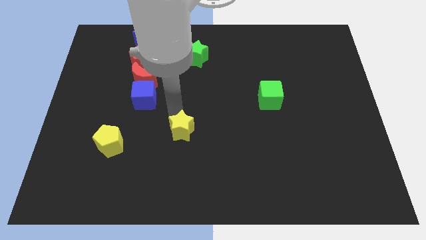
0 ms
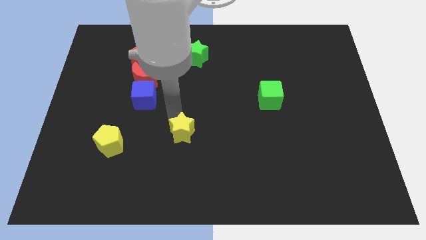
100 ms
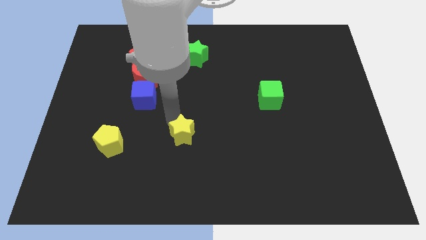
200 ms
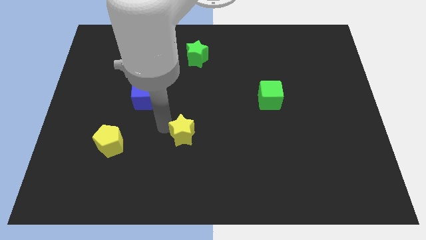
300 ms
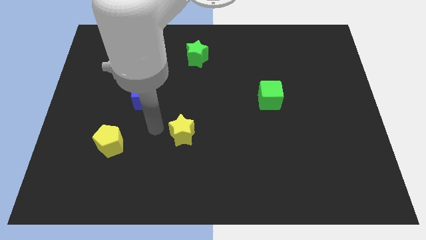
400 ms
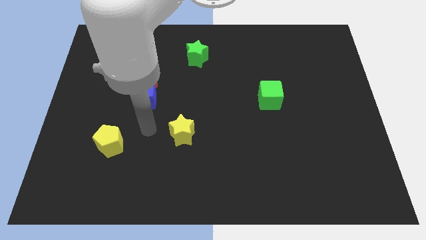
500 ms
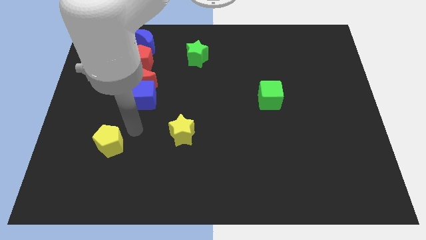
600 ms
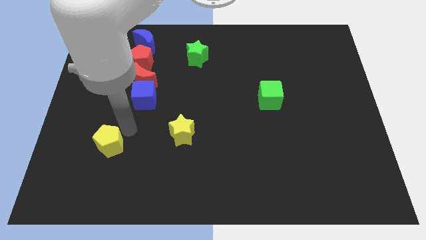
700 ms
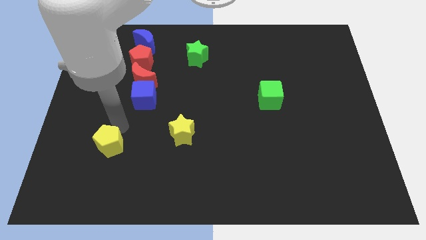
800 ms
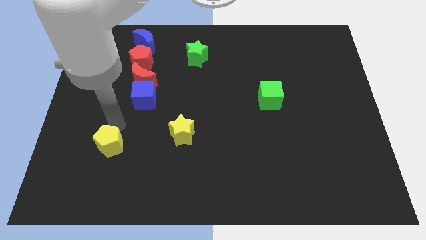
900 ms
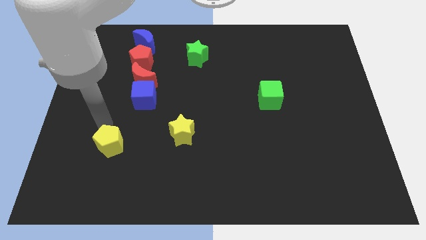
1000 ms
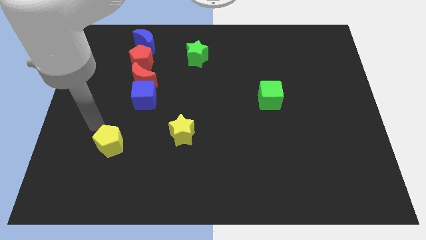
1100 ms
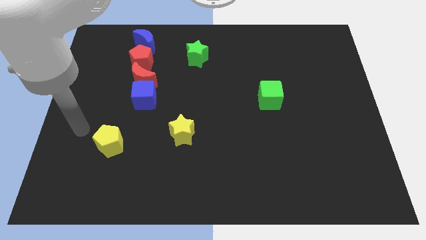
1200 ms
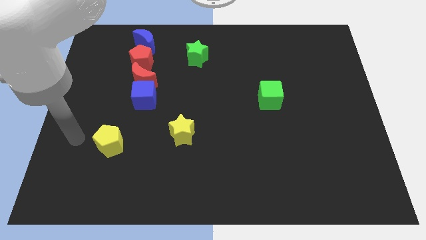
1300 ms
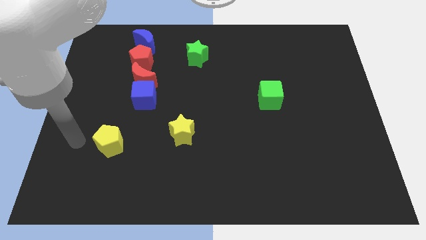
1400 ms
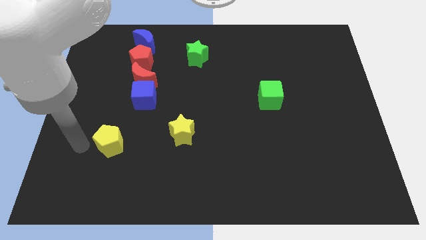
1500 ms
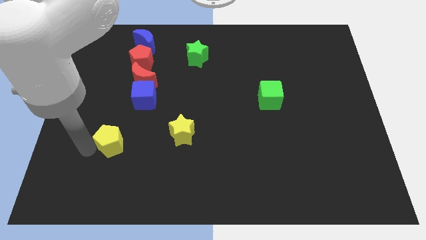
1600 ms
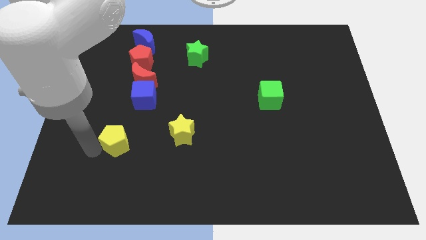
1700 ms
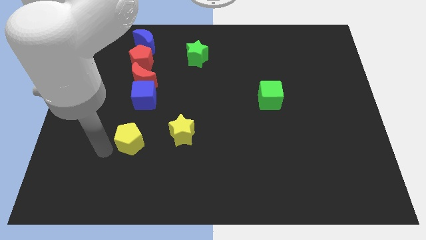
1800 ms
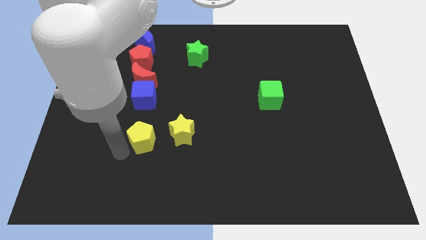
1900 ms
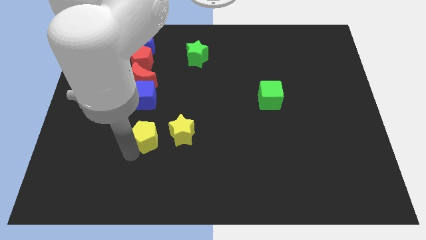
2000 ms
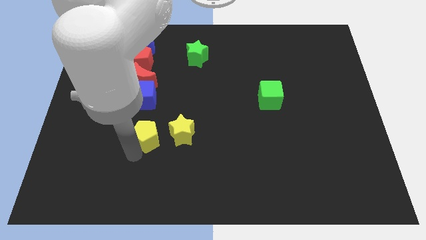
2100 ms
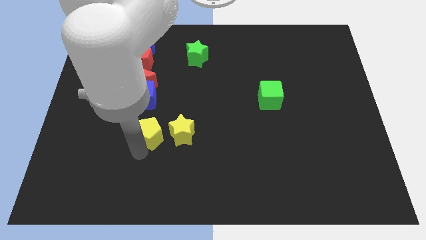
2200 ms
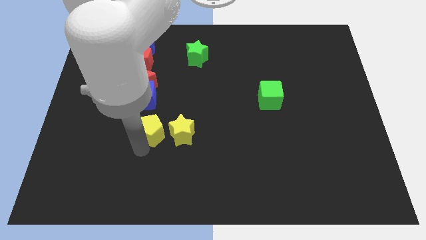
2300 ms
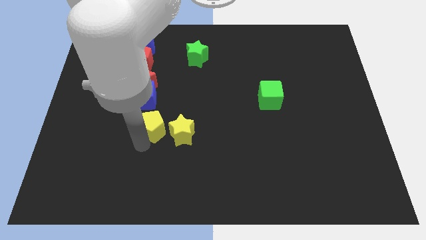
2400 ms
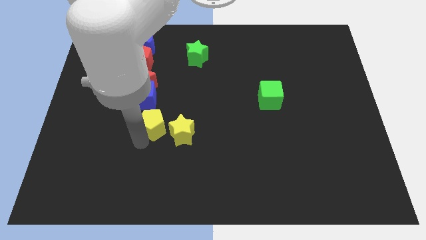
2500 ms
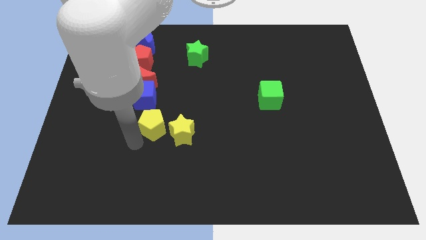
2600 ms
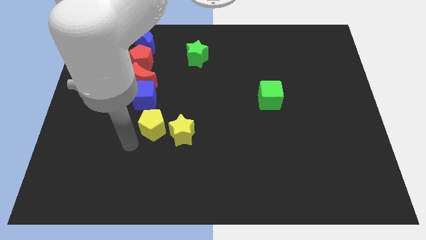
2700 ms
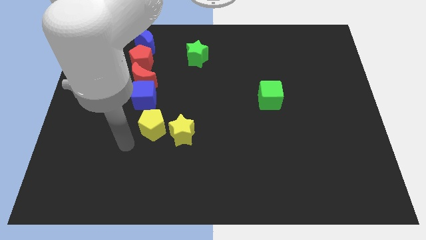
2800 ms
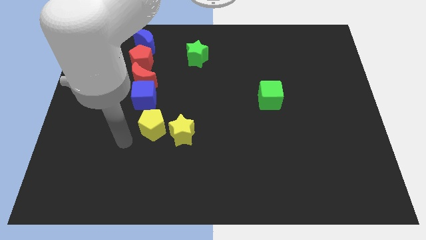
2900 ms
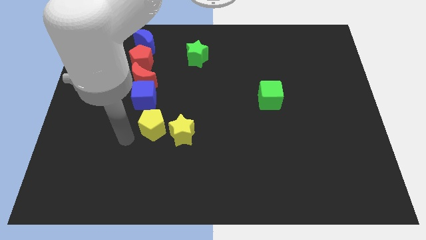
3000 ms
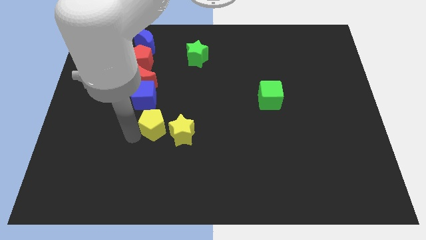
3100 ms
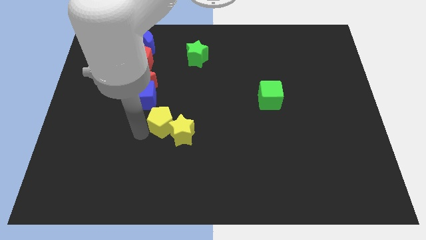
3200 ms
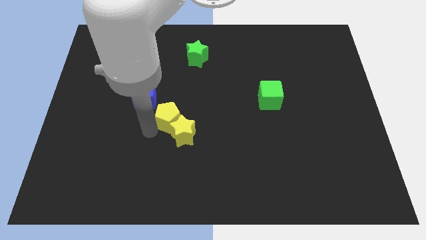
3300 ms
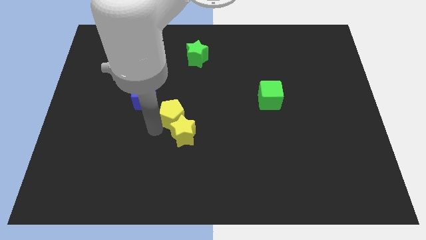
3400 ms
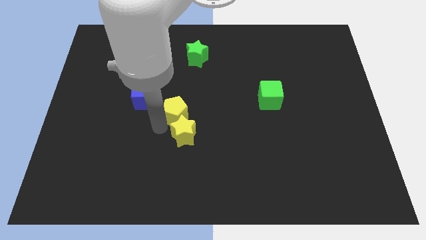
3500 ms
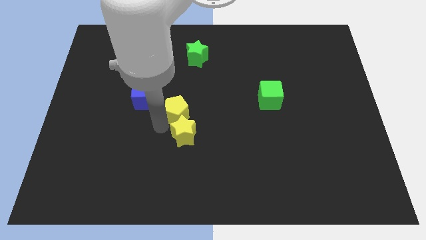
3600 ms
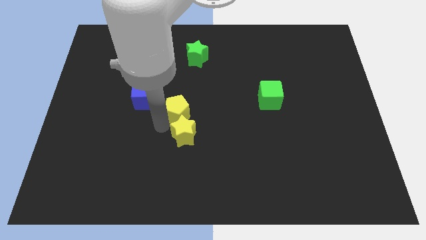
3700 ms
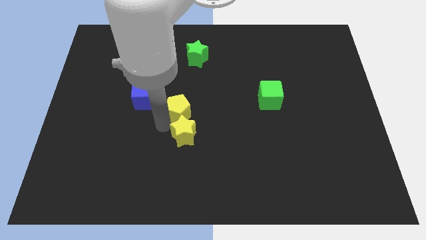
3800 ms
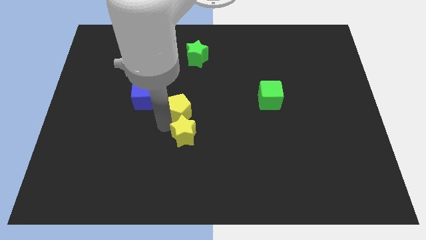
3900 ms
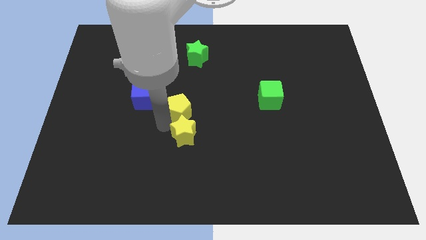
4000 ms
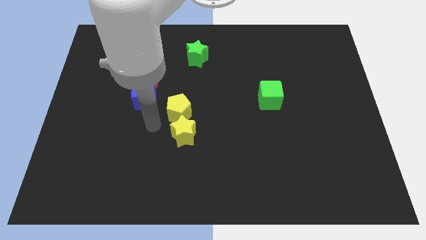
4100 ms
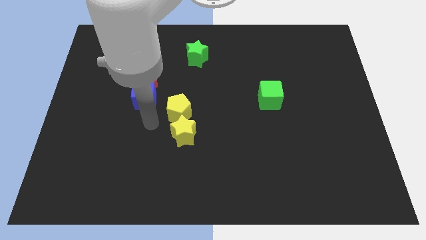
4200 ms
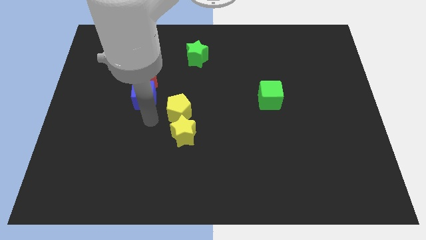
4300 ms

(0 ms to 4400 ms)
move the yellow pentagon above the yellow star

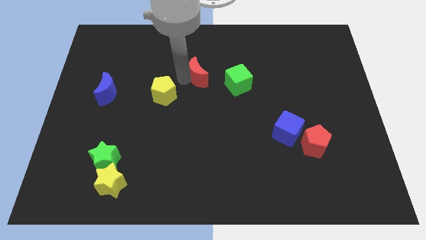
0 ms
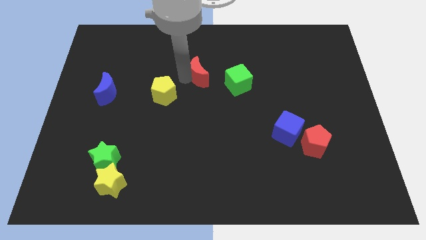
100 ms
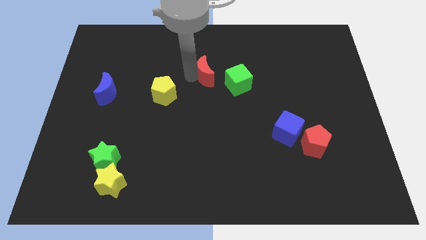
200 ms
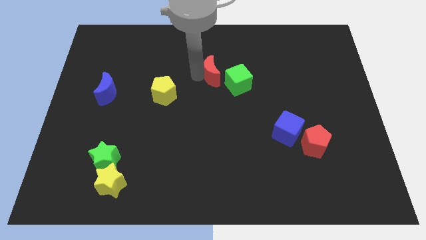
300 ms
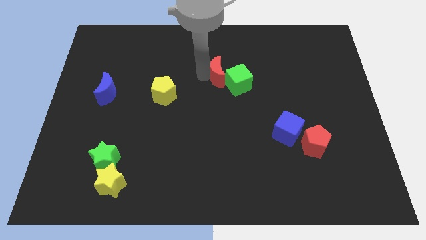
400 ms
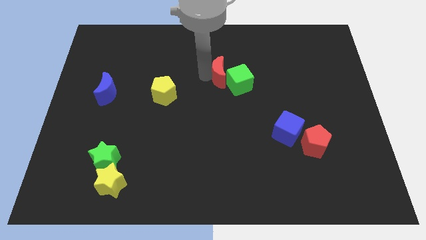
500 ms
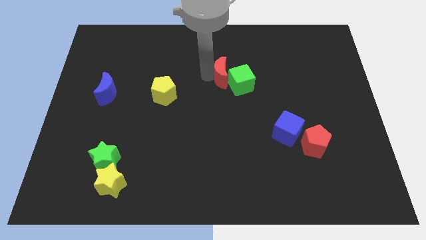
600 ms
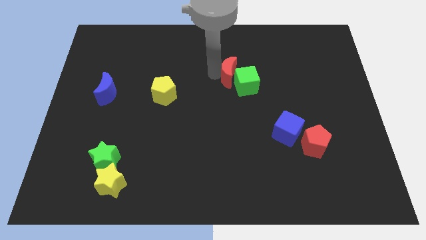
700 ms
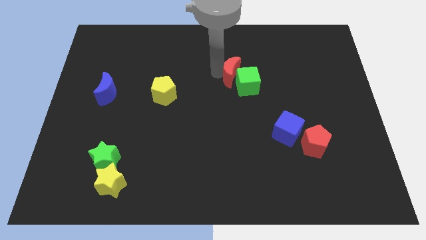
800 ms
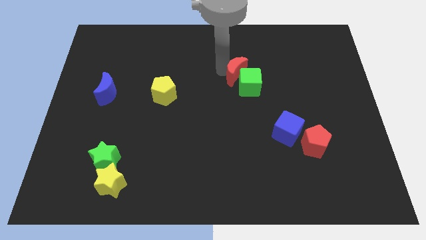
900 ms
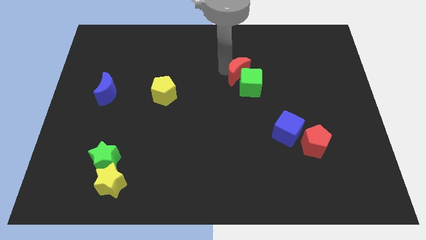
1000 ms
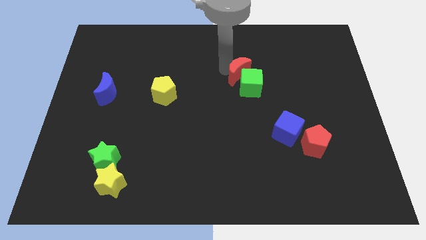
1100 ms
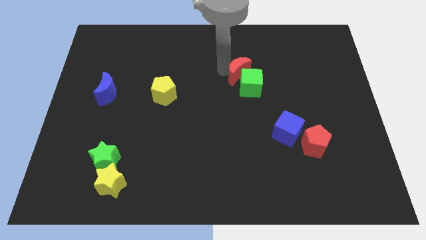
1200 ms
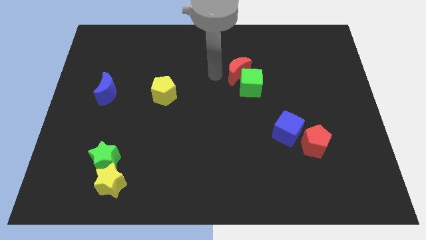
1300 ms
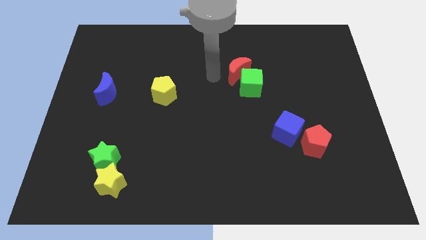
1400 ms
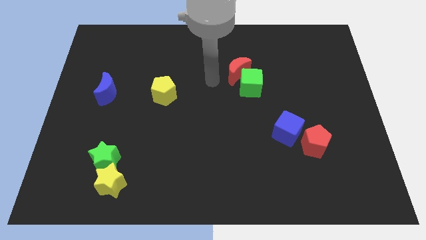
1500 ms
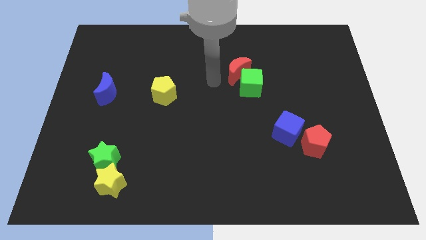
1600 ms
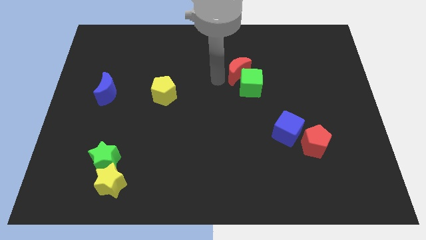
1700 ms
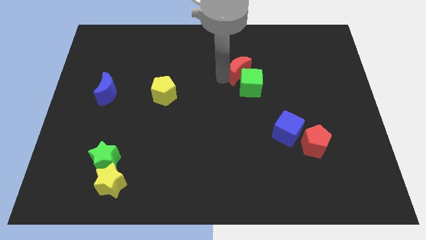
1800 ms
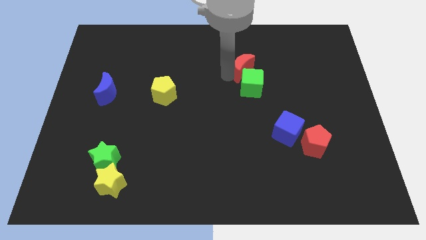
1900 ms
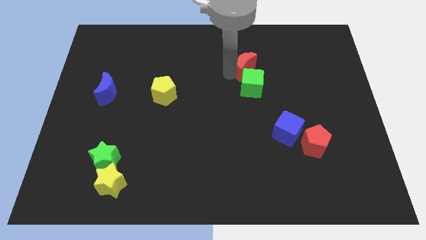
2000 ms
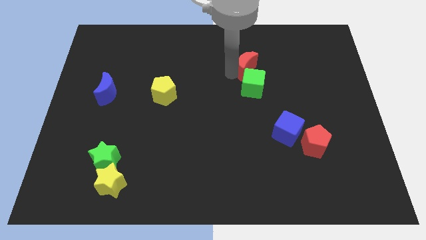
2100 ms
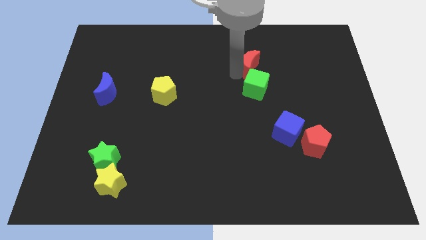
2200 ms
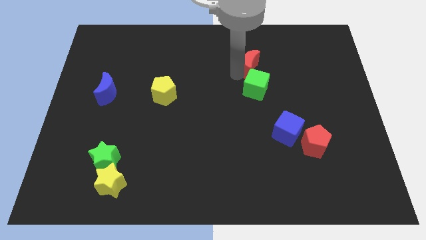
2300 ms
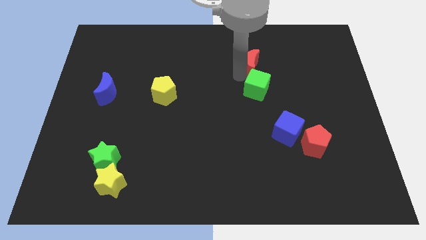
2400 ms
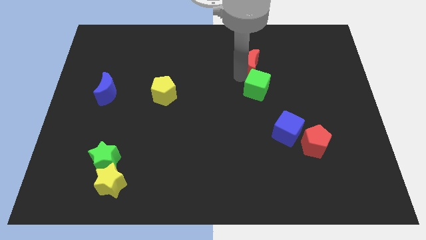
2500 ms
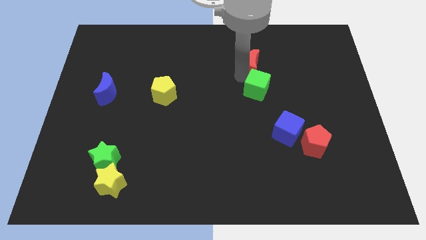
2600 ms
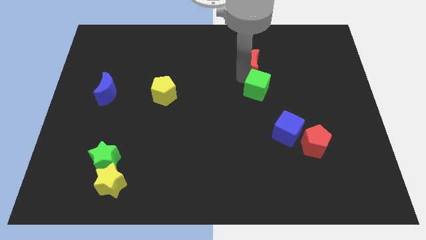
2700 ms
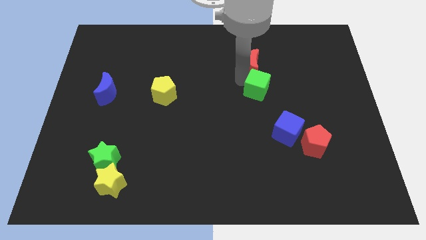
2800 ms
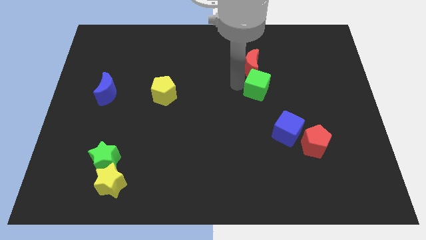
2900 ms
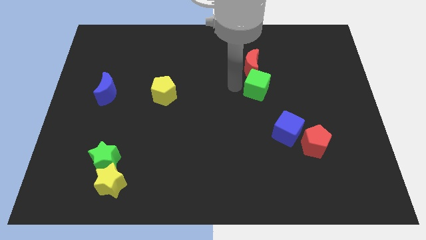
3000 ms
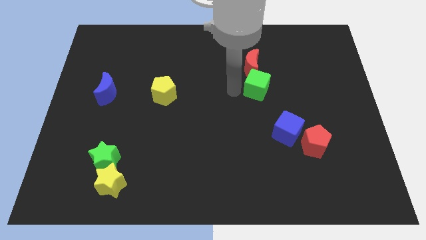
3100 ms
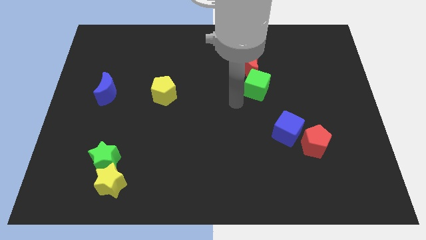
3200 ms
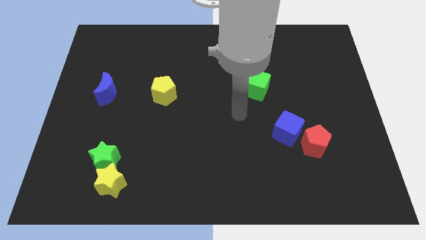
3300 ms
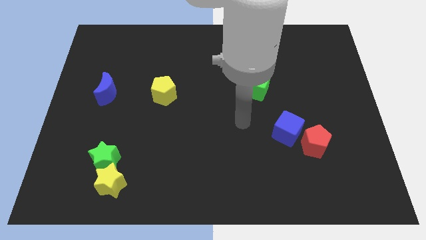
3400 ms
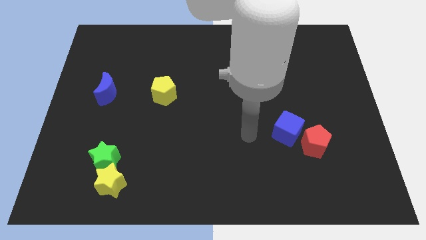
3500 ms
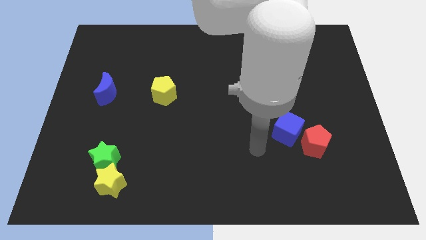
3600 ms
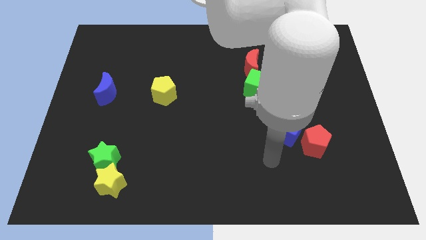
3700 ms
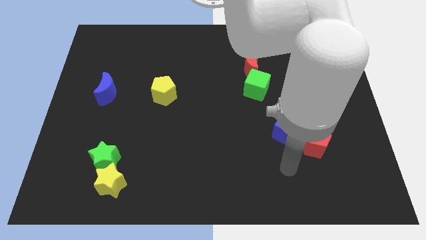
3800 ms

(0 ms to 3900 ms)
place the red crescent above the green cube

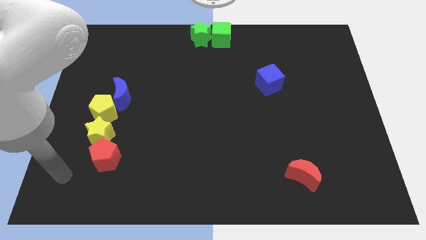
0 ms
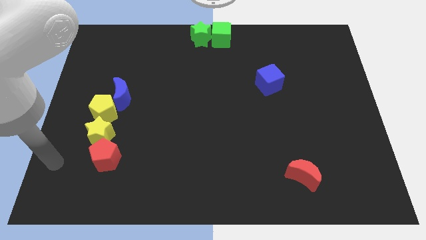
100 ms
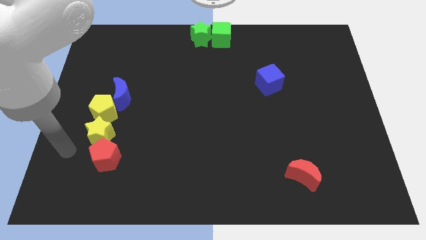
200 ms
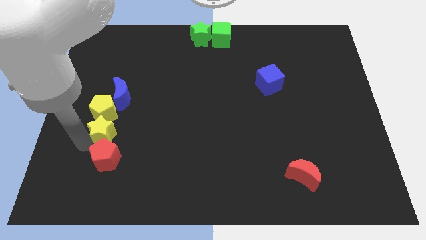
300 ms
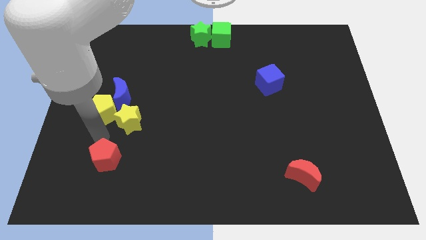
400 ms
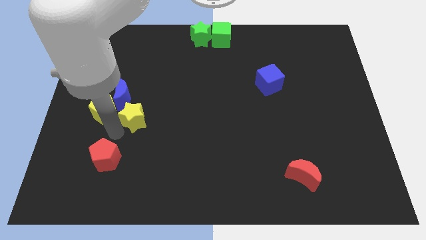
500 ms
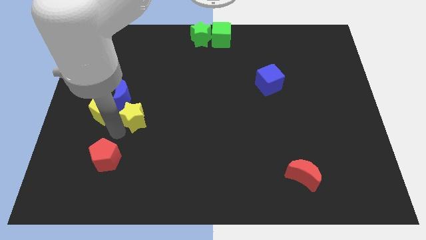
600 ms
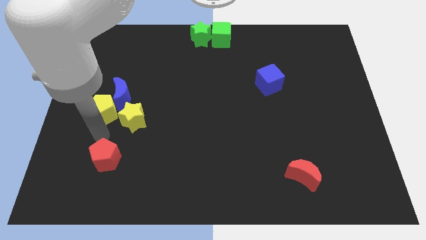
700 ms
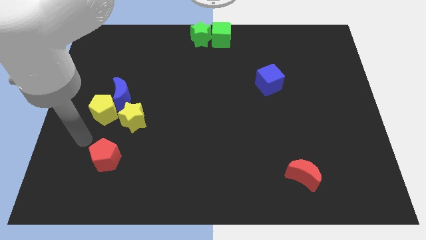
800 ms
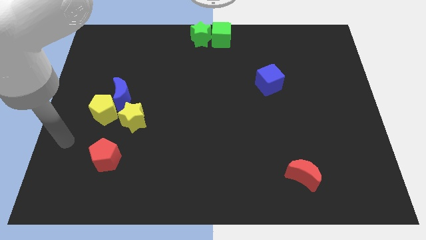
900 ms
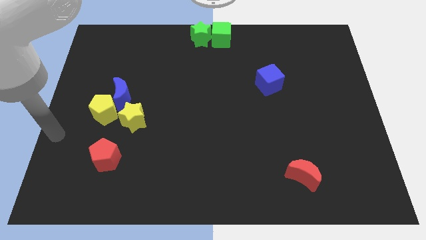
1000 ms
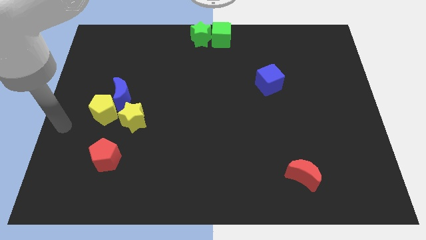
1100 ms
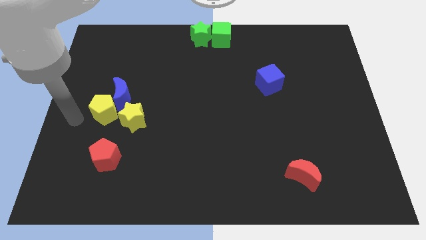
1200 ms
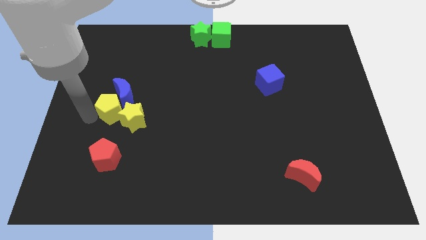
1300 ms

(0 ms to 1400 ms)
separate the yellow star from the yellow pentagon and red pentagon
